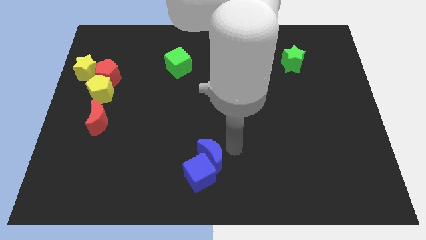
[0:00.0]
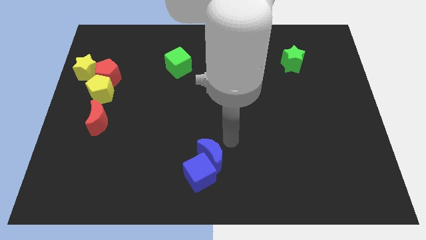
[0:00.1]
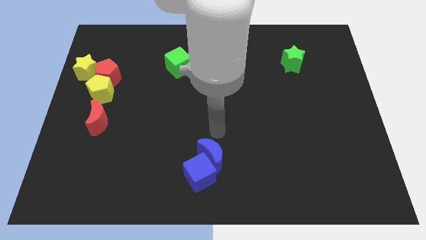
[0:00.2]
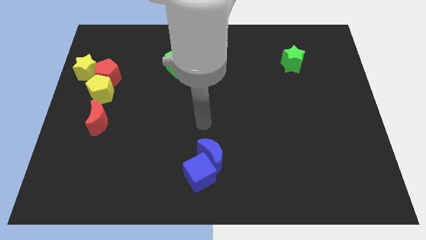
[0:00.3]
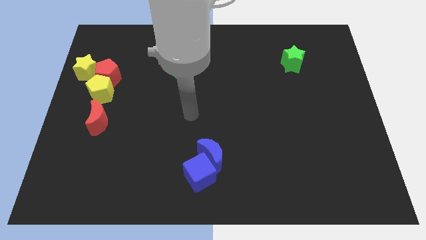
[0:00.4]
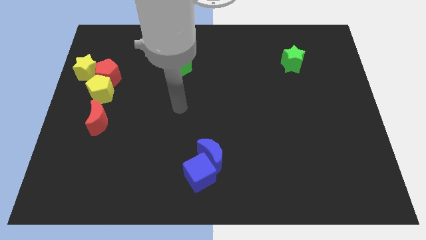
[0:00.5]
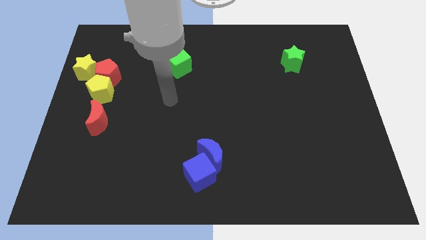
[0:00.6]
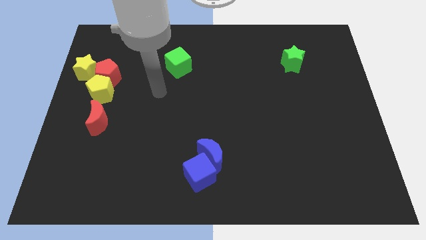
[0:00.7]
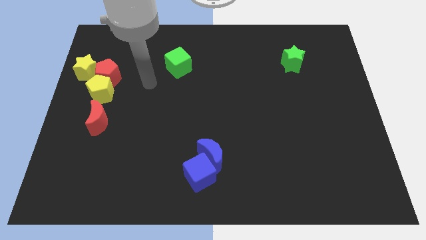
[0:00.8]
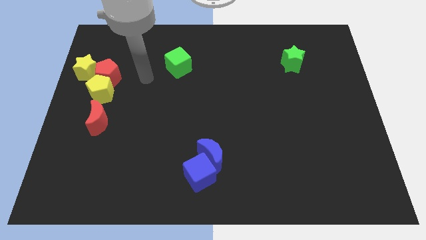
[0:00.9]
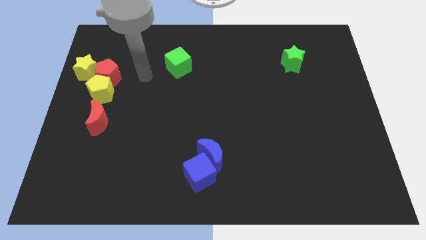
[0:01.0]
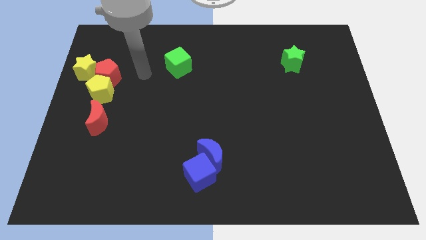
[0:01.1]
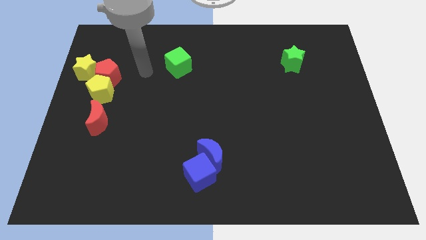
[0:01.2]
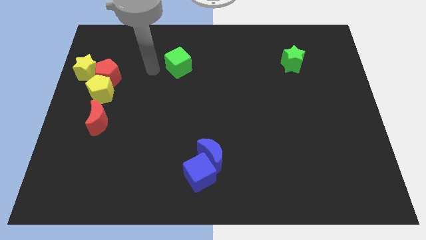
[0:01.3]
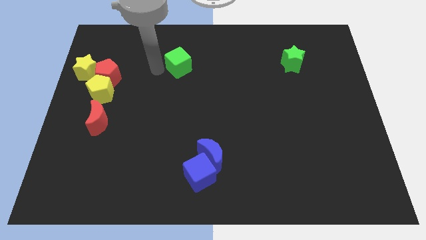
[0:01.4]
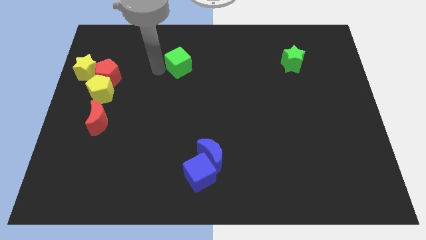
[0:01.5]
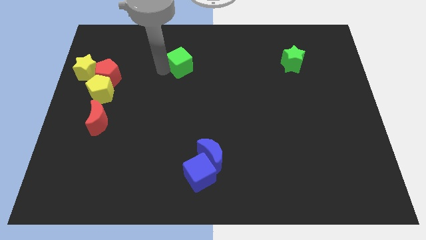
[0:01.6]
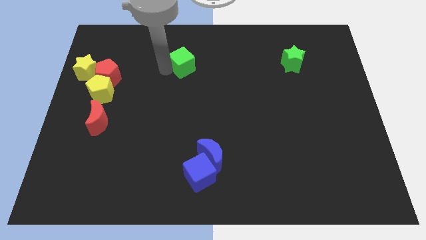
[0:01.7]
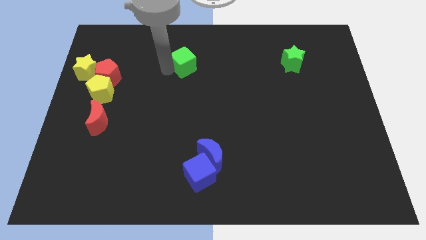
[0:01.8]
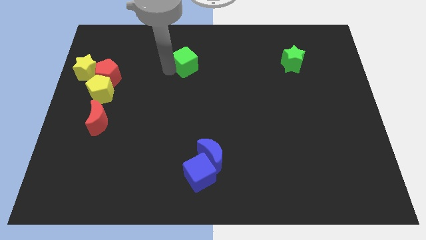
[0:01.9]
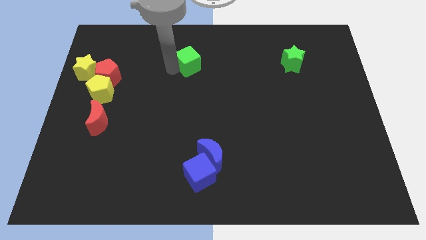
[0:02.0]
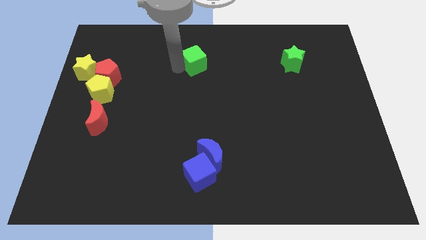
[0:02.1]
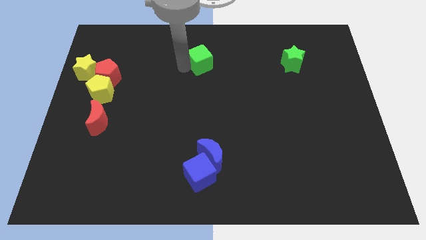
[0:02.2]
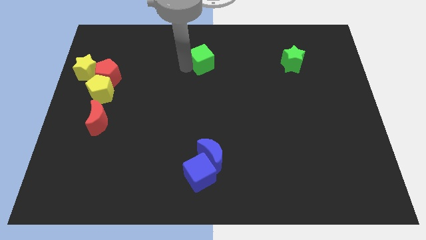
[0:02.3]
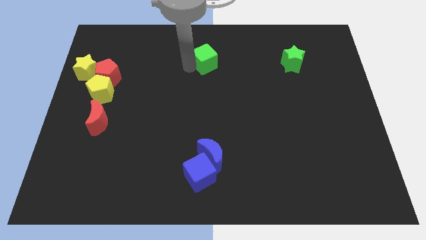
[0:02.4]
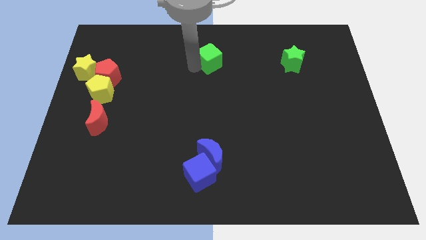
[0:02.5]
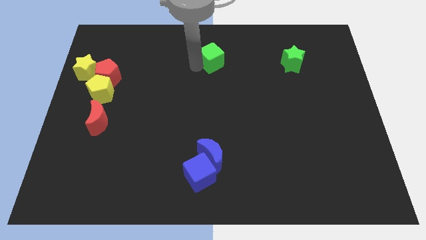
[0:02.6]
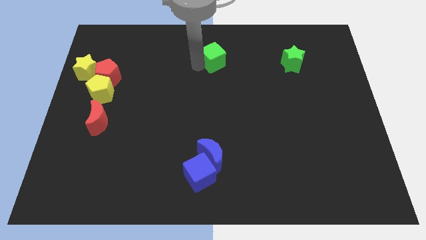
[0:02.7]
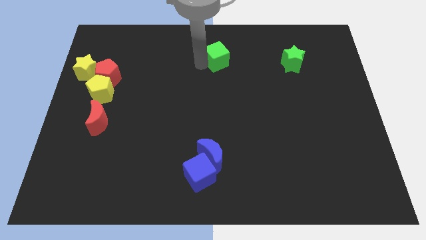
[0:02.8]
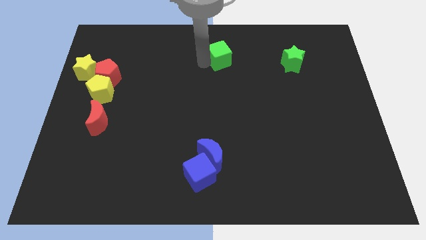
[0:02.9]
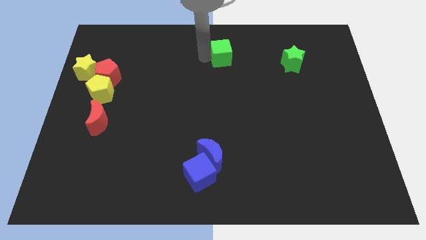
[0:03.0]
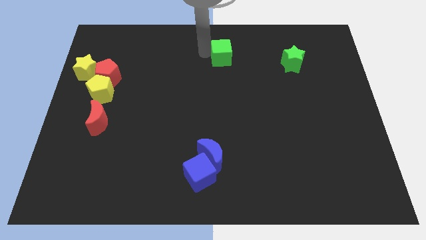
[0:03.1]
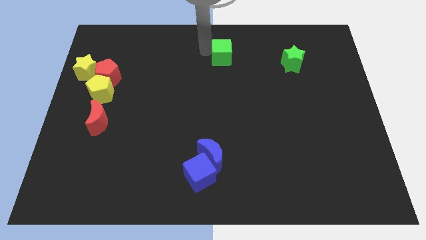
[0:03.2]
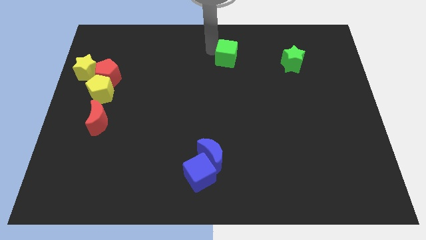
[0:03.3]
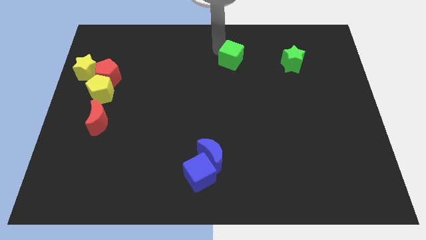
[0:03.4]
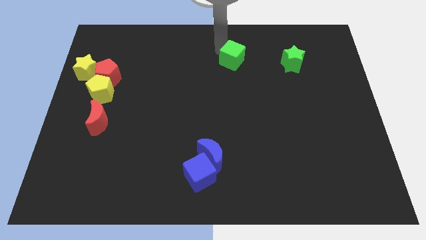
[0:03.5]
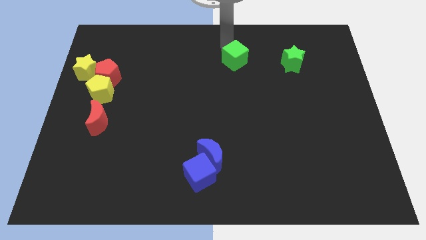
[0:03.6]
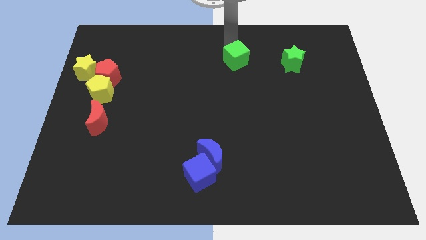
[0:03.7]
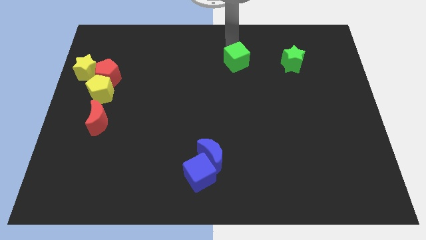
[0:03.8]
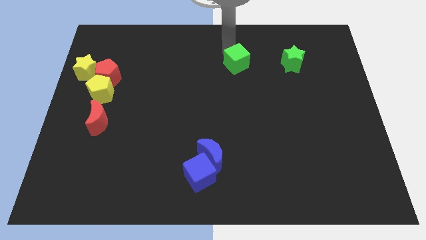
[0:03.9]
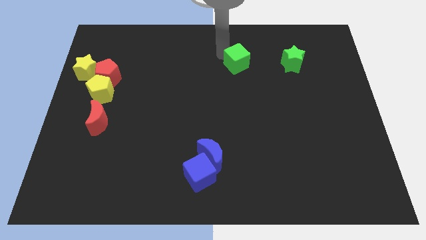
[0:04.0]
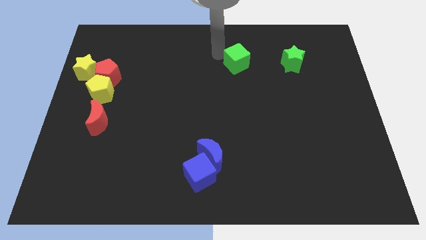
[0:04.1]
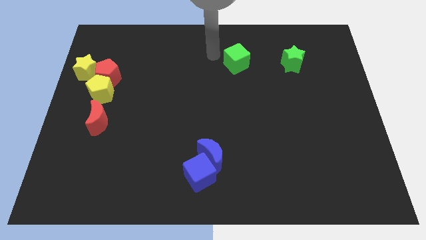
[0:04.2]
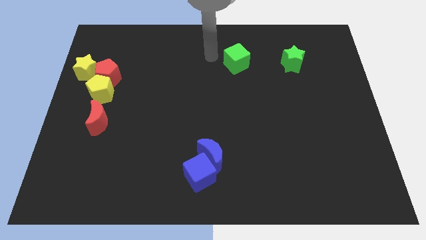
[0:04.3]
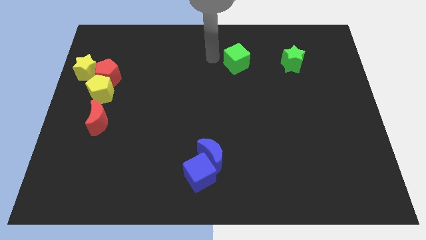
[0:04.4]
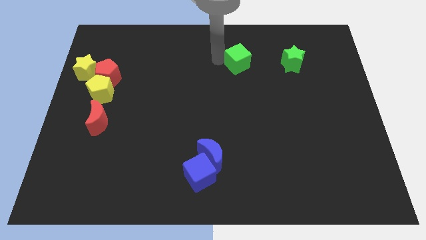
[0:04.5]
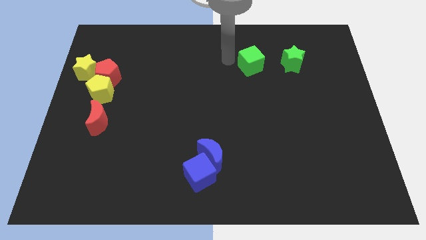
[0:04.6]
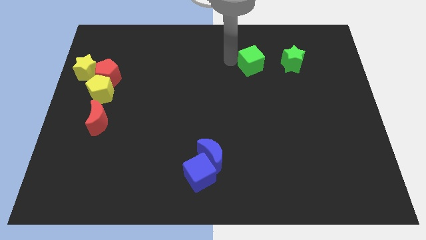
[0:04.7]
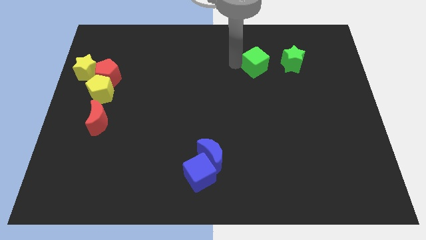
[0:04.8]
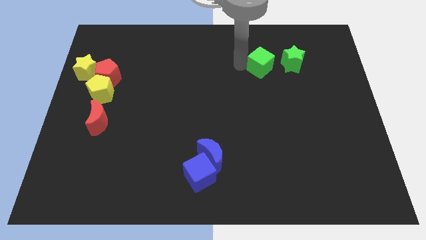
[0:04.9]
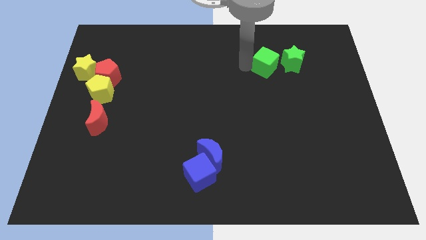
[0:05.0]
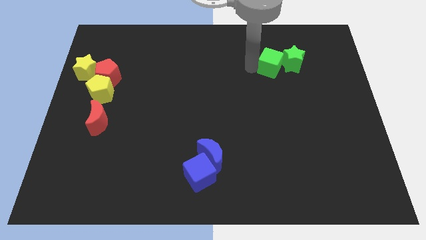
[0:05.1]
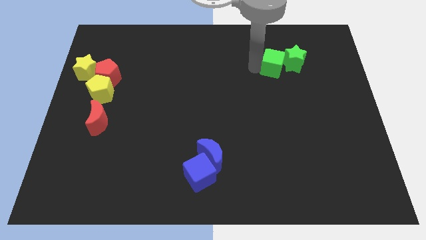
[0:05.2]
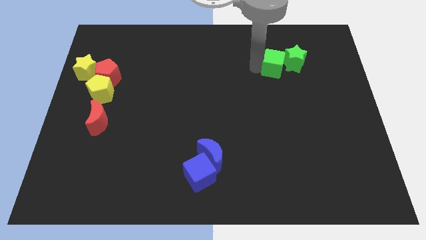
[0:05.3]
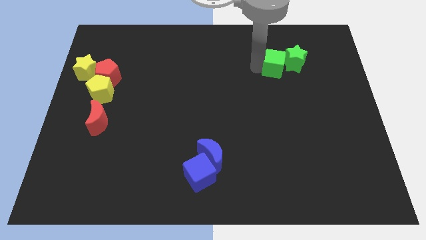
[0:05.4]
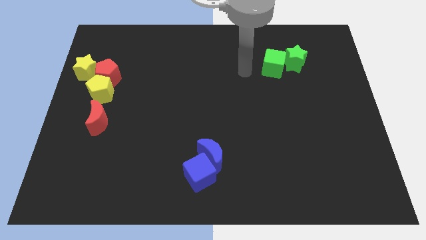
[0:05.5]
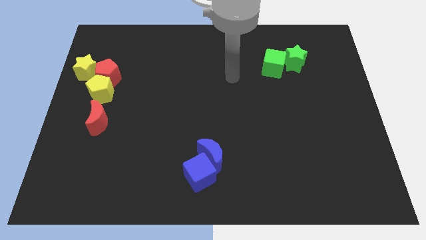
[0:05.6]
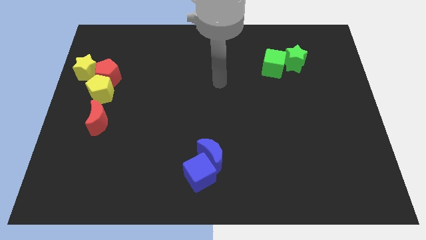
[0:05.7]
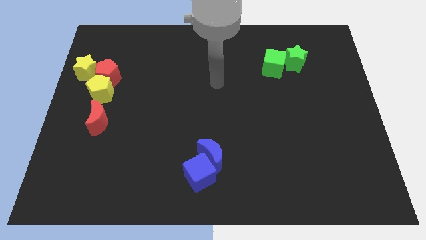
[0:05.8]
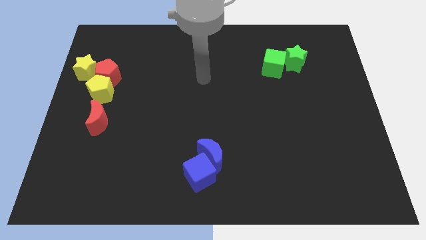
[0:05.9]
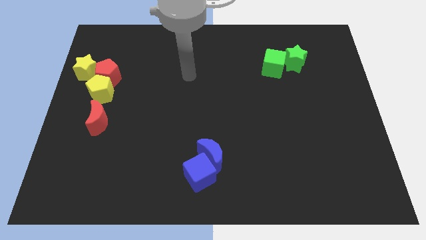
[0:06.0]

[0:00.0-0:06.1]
push green cube into green star

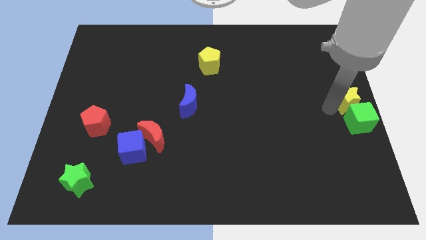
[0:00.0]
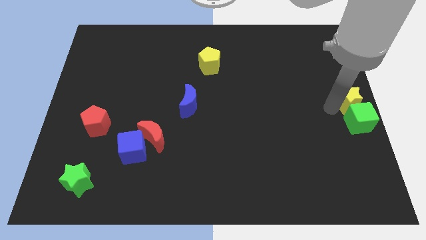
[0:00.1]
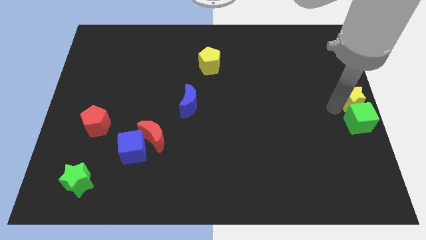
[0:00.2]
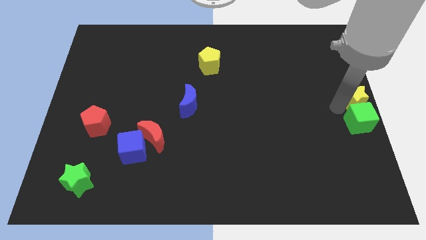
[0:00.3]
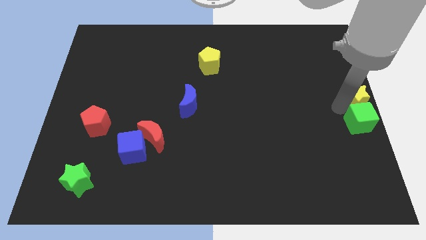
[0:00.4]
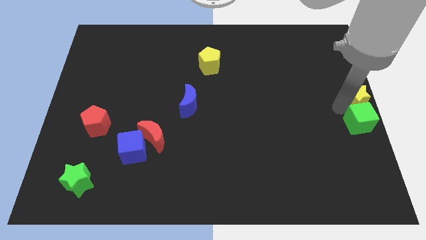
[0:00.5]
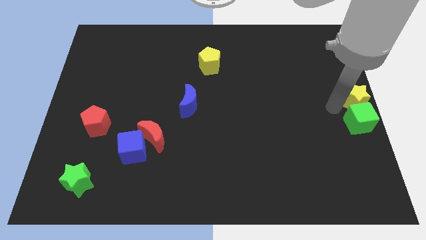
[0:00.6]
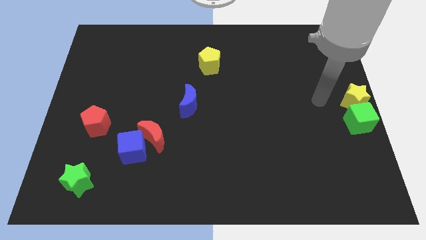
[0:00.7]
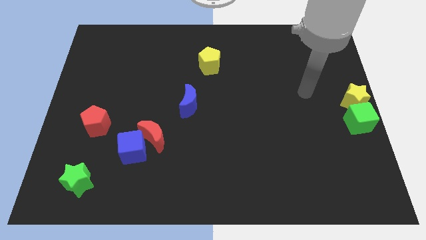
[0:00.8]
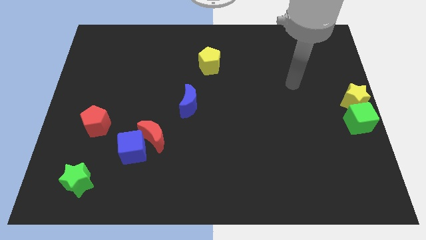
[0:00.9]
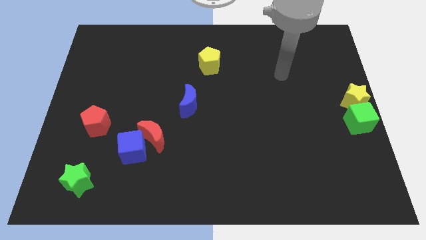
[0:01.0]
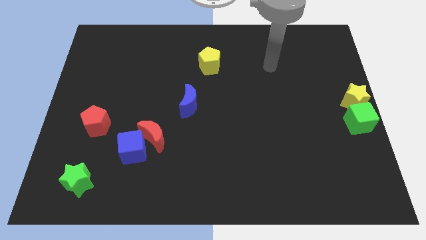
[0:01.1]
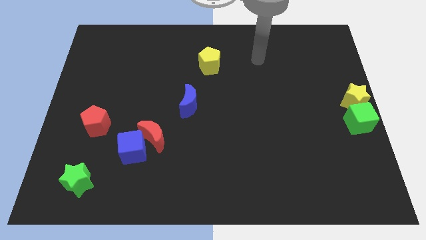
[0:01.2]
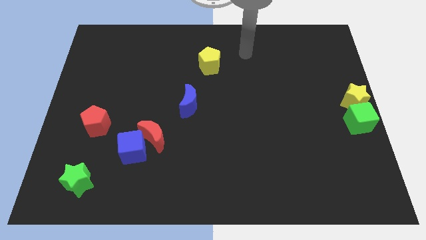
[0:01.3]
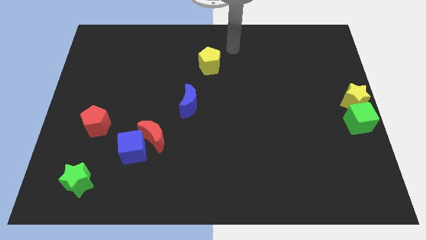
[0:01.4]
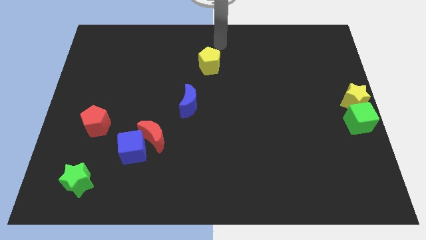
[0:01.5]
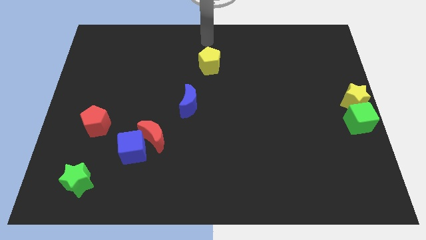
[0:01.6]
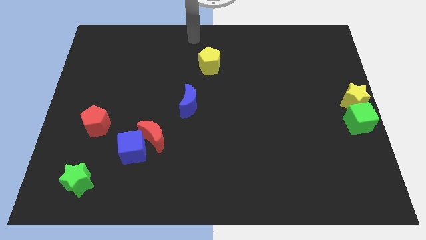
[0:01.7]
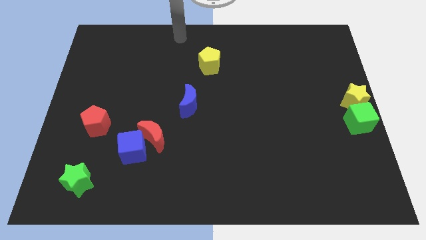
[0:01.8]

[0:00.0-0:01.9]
move the arm towards the yellow pentagon

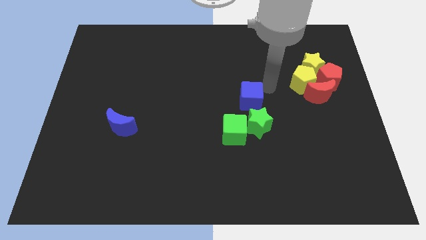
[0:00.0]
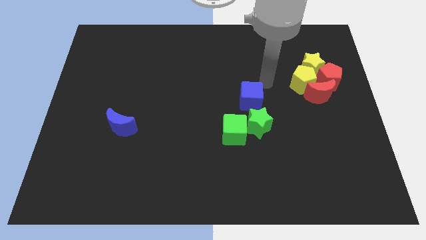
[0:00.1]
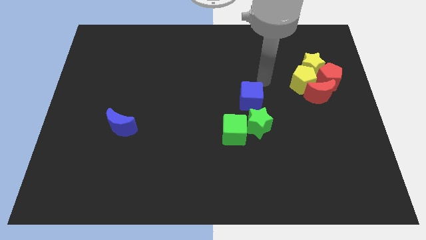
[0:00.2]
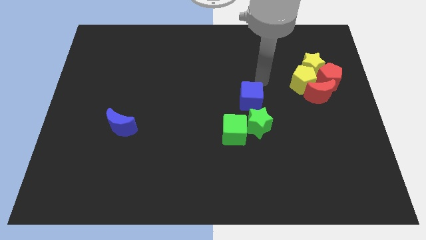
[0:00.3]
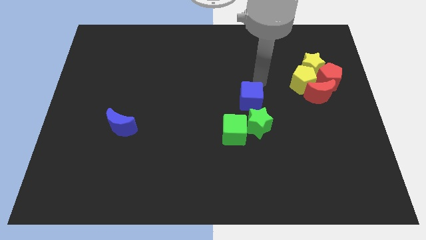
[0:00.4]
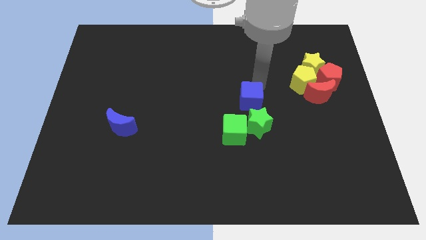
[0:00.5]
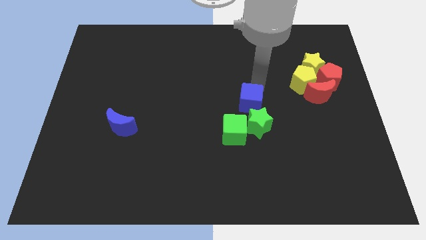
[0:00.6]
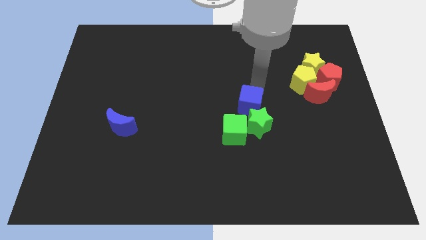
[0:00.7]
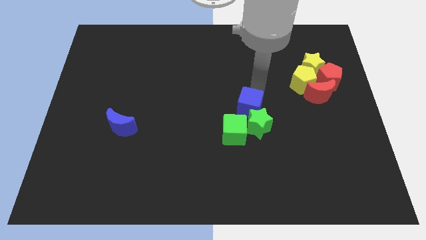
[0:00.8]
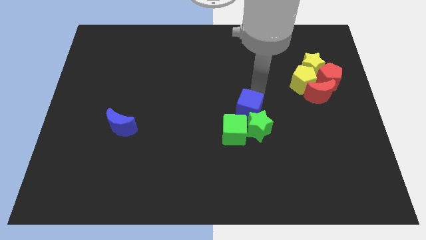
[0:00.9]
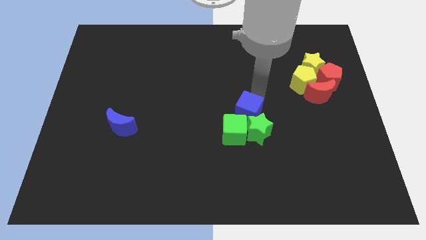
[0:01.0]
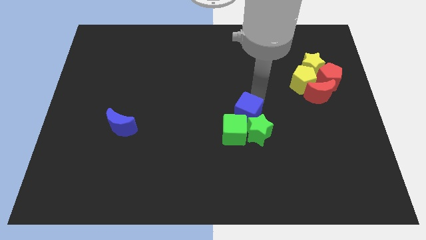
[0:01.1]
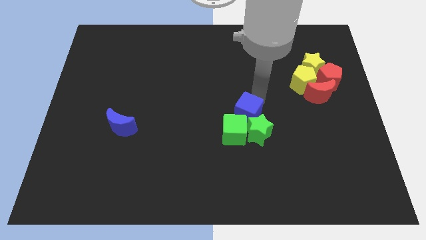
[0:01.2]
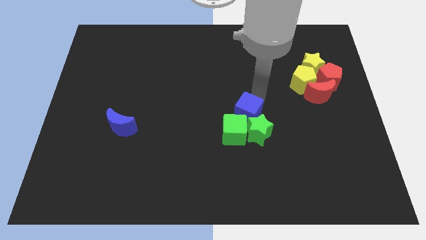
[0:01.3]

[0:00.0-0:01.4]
move the blue cube near green cube and green star
